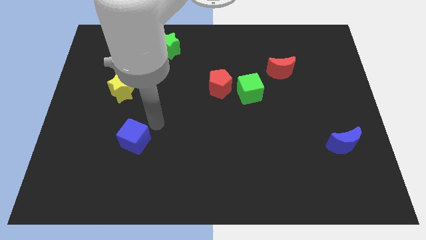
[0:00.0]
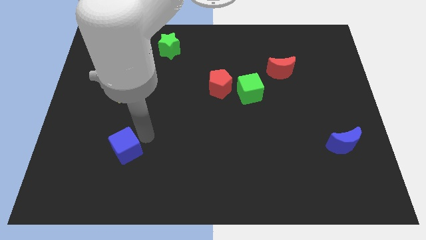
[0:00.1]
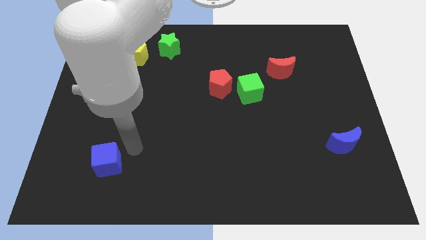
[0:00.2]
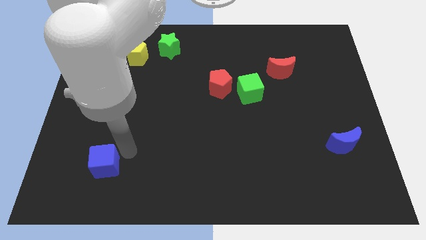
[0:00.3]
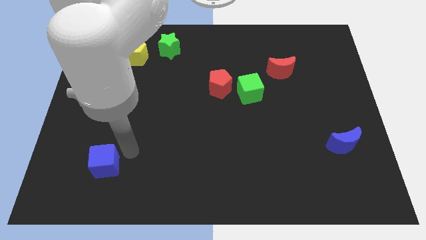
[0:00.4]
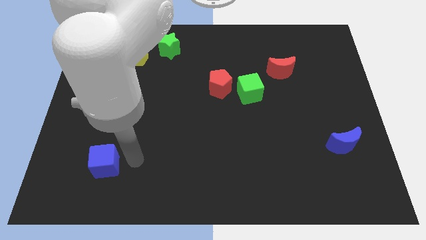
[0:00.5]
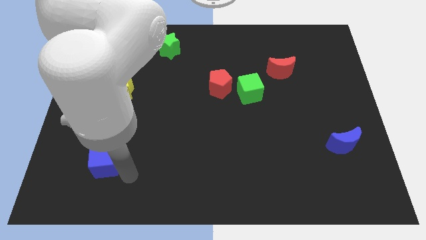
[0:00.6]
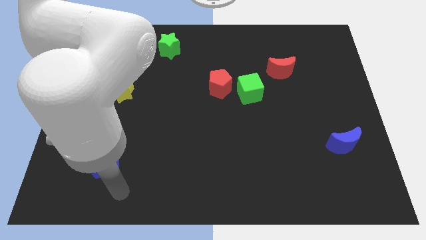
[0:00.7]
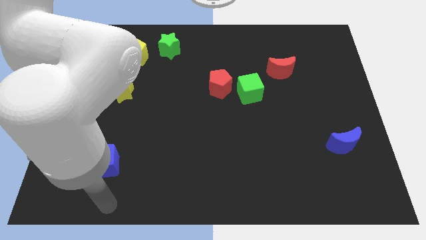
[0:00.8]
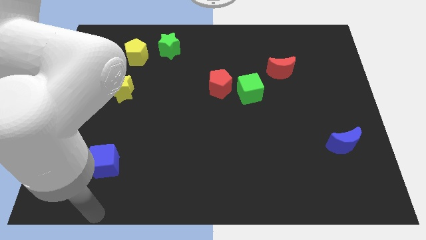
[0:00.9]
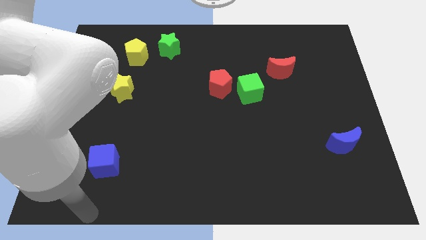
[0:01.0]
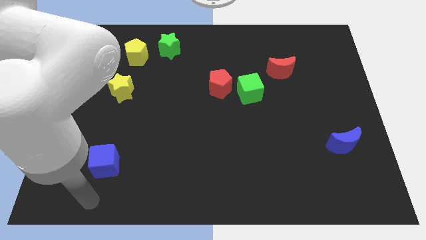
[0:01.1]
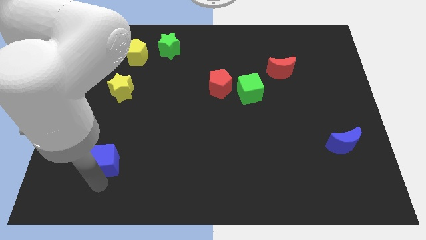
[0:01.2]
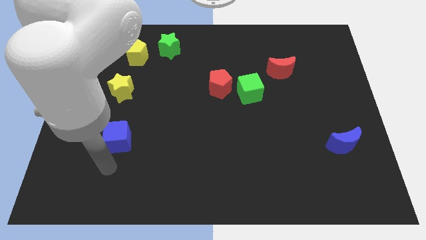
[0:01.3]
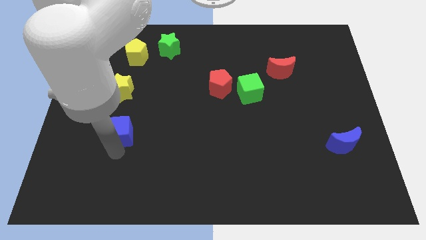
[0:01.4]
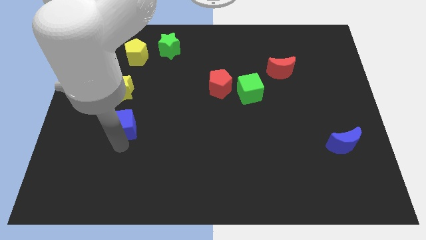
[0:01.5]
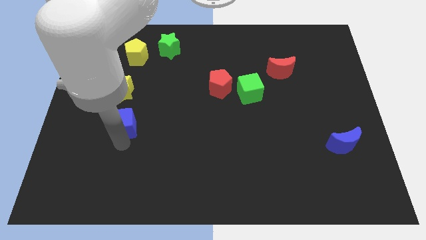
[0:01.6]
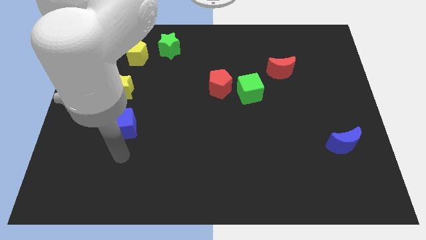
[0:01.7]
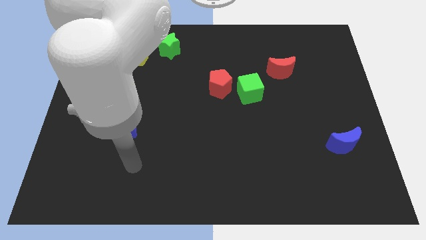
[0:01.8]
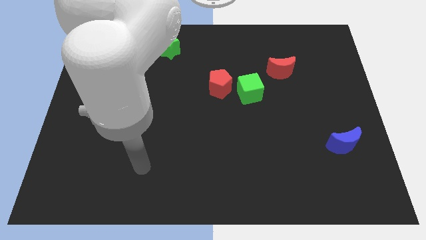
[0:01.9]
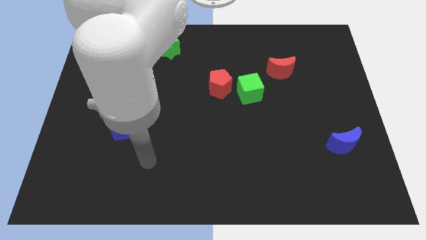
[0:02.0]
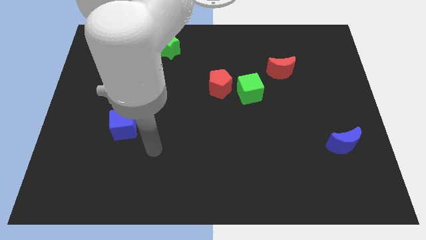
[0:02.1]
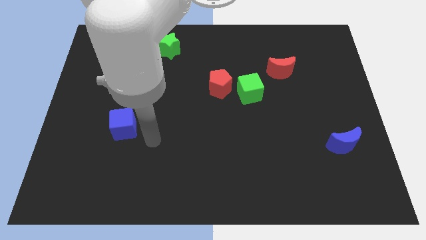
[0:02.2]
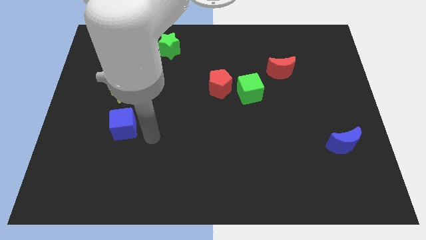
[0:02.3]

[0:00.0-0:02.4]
slightly push the blue cube to the upwards

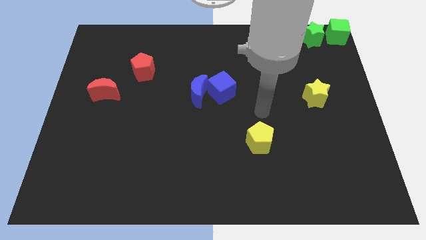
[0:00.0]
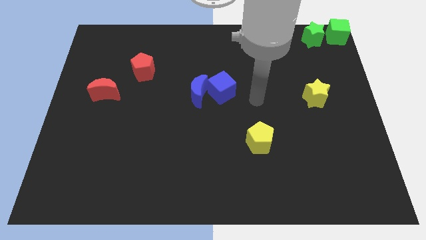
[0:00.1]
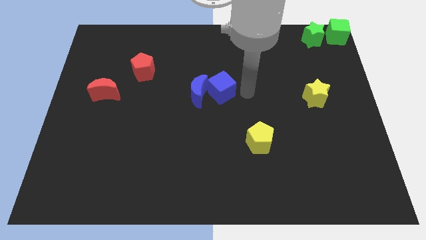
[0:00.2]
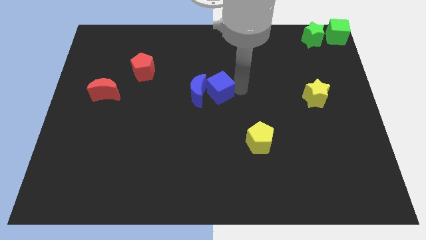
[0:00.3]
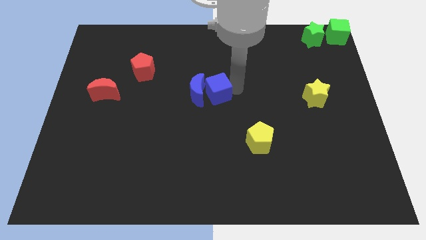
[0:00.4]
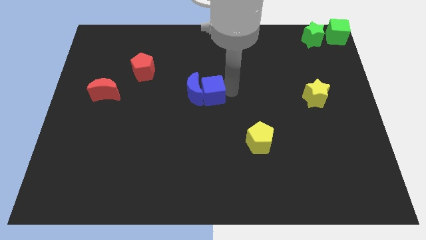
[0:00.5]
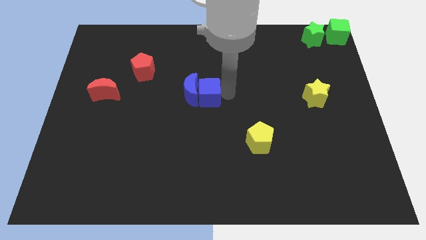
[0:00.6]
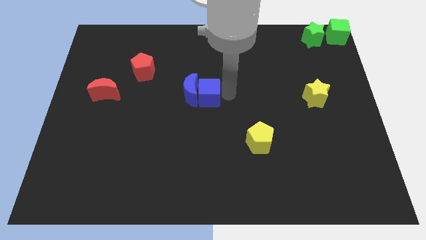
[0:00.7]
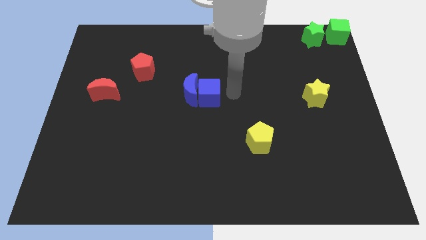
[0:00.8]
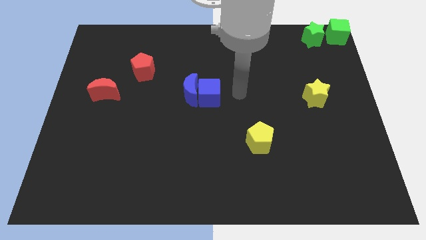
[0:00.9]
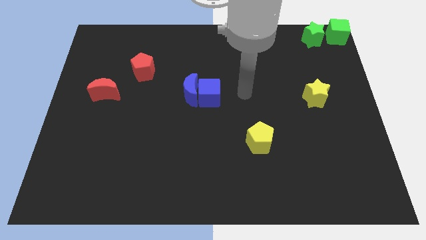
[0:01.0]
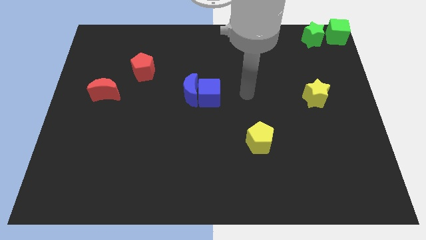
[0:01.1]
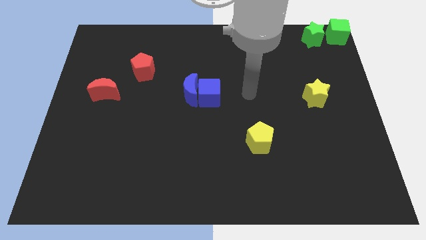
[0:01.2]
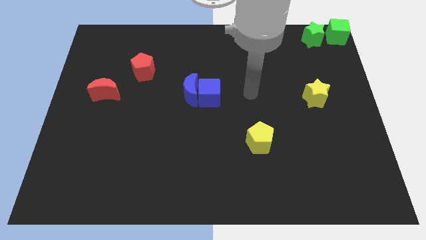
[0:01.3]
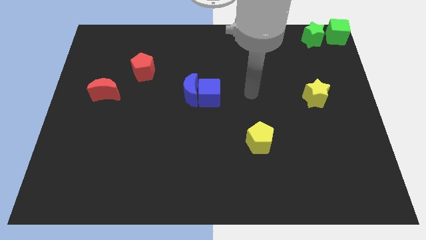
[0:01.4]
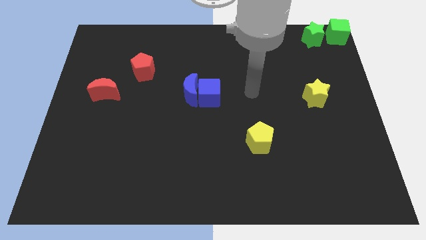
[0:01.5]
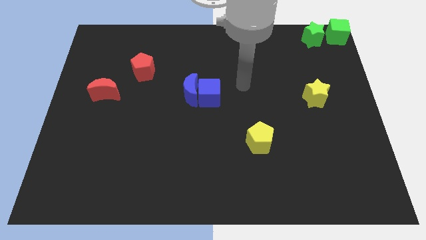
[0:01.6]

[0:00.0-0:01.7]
push the blue cube into the blue moon

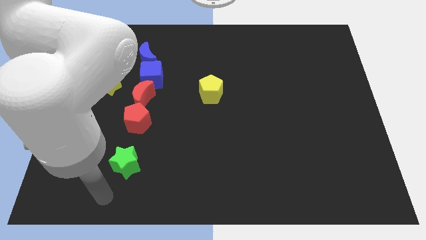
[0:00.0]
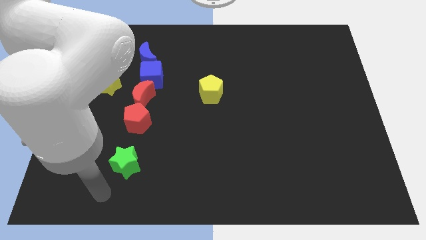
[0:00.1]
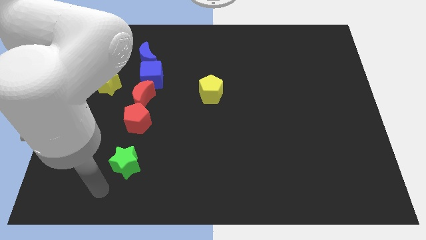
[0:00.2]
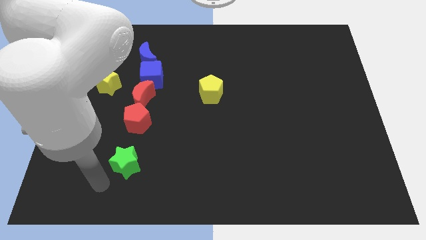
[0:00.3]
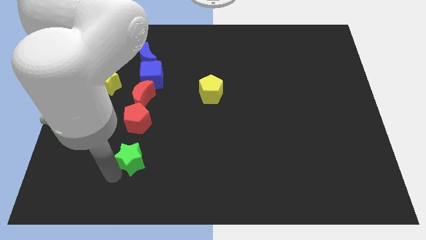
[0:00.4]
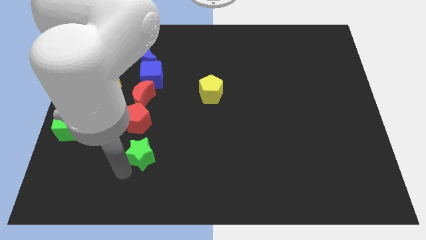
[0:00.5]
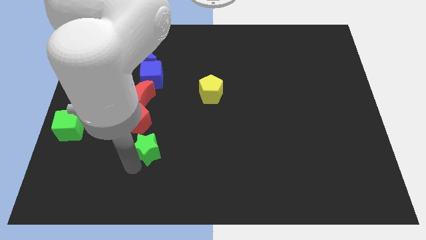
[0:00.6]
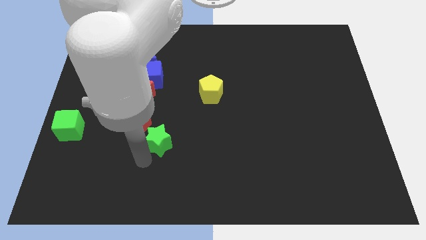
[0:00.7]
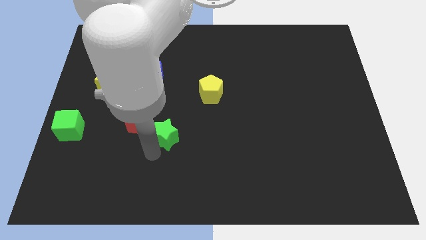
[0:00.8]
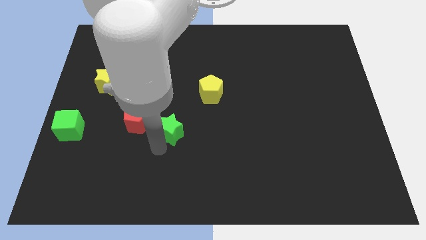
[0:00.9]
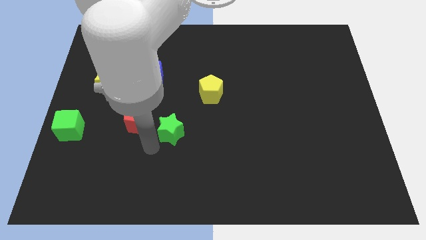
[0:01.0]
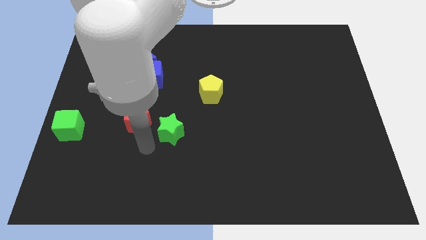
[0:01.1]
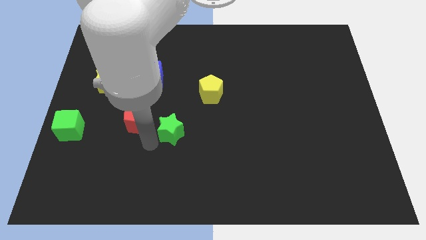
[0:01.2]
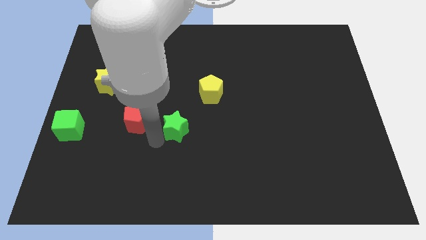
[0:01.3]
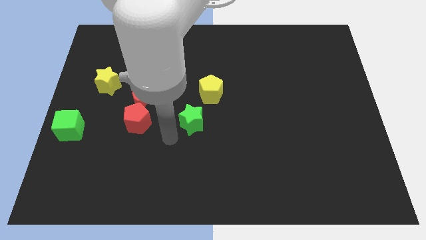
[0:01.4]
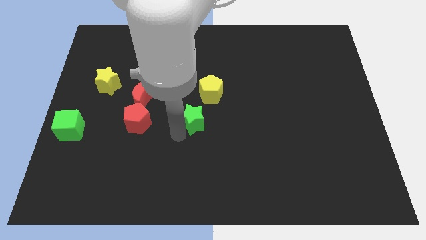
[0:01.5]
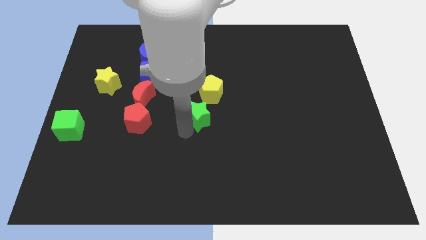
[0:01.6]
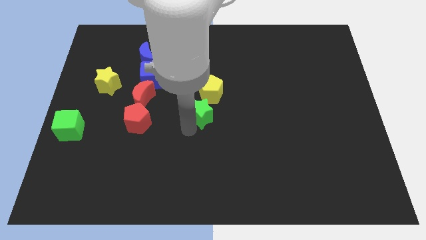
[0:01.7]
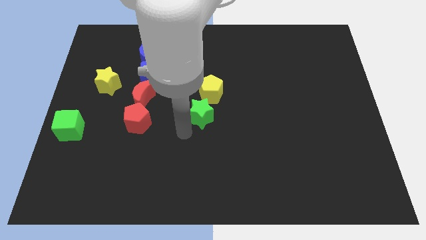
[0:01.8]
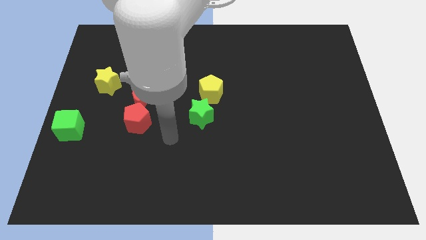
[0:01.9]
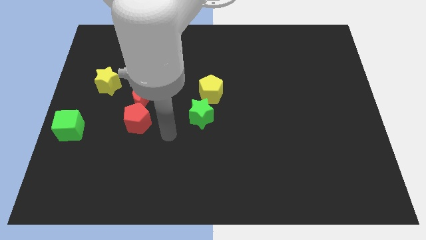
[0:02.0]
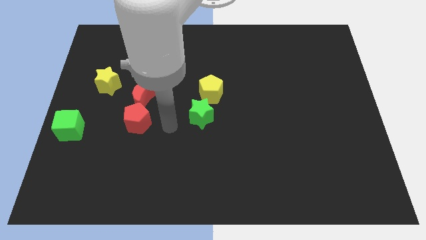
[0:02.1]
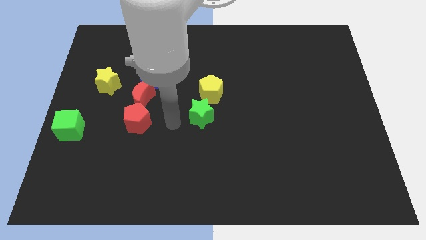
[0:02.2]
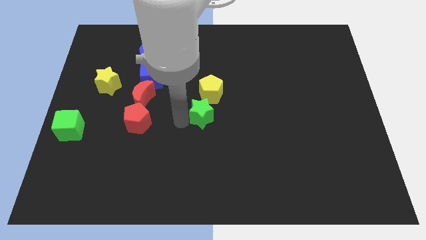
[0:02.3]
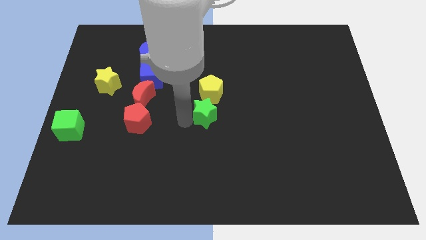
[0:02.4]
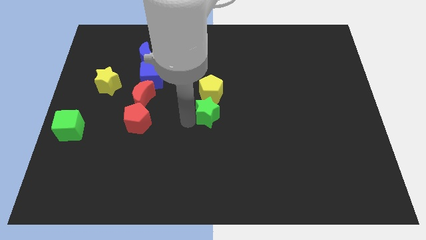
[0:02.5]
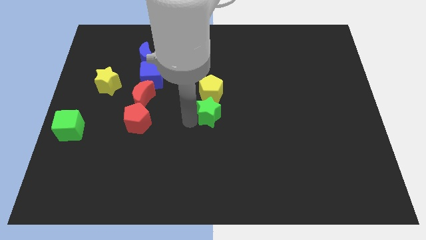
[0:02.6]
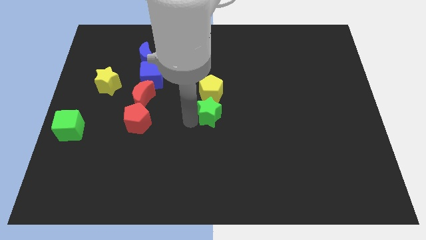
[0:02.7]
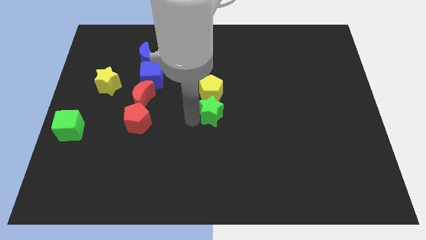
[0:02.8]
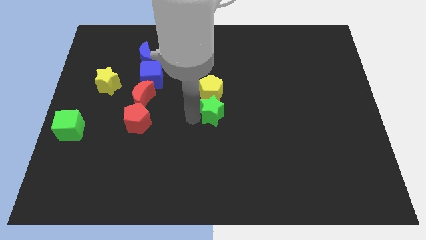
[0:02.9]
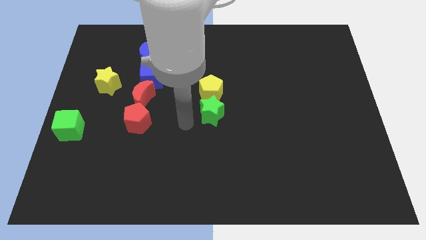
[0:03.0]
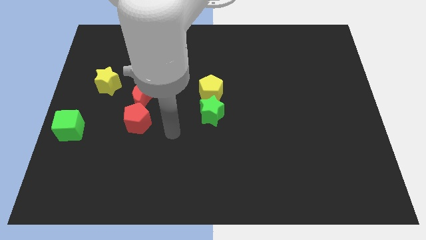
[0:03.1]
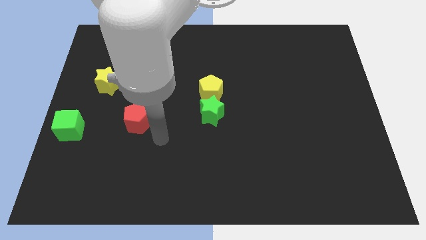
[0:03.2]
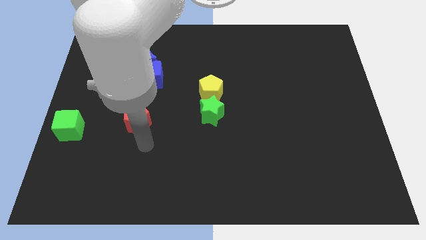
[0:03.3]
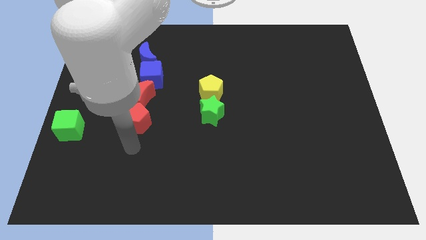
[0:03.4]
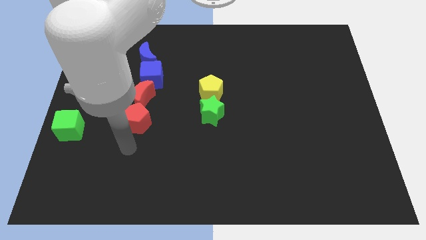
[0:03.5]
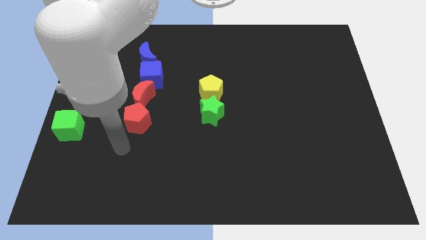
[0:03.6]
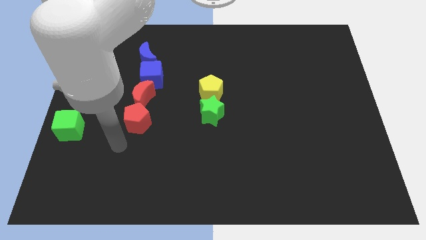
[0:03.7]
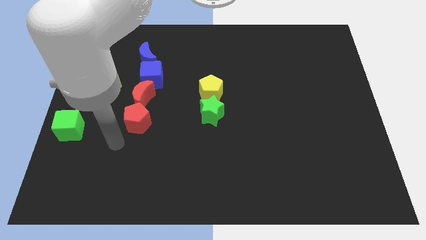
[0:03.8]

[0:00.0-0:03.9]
put the green star below the yellow pentagon

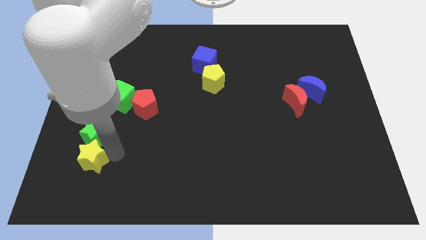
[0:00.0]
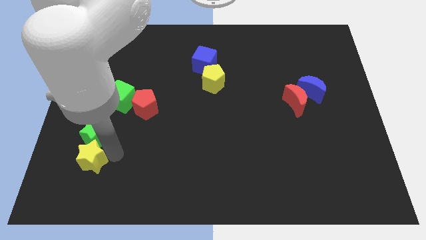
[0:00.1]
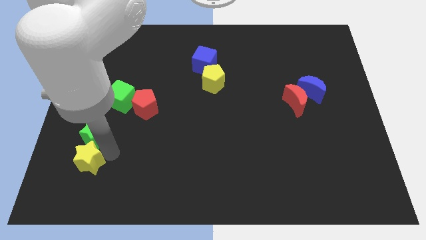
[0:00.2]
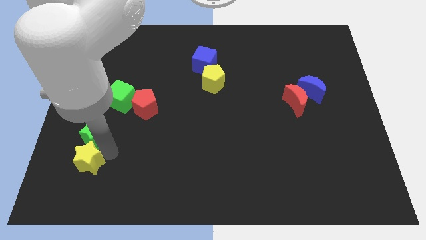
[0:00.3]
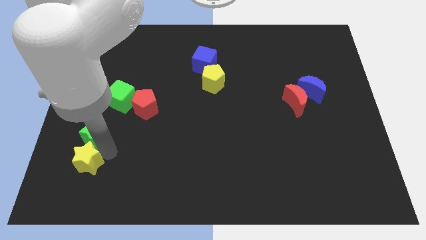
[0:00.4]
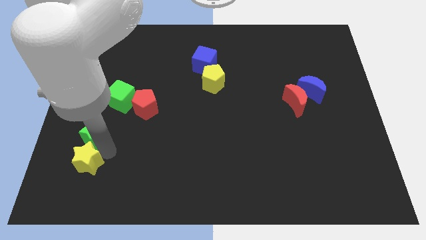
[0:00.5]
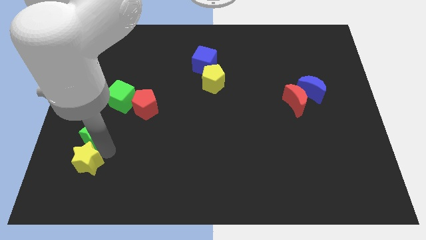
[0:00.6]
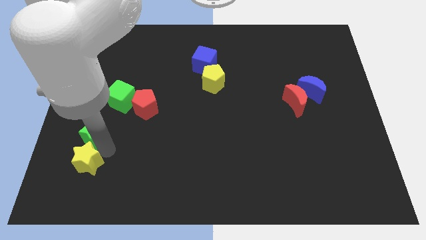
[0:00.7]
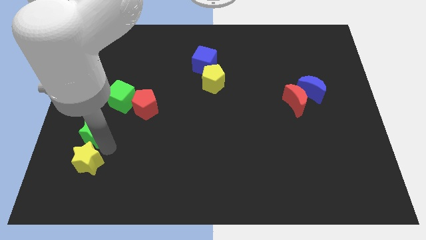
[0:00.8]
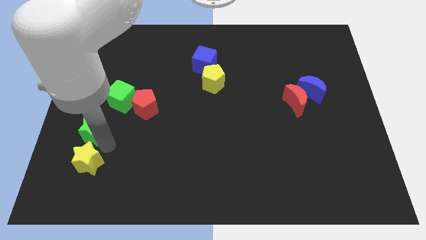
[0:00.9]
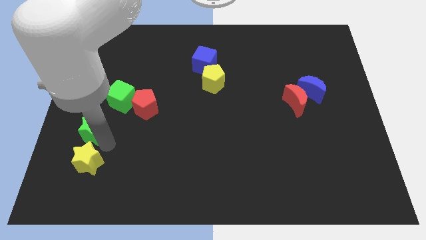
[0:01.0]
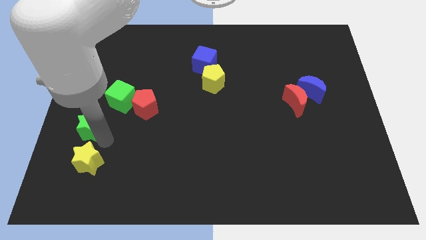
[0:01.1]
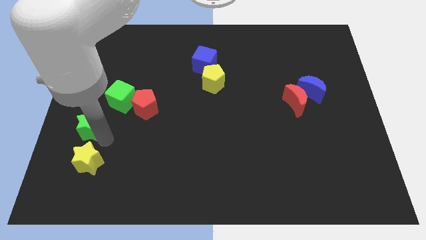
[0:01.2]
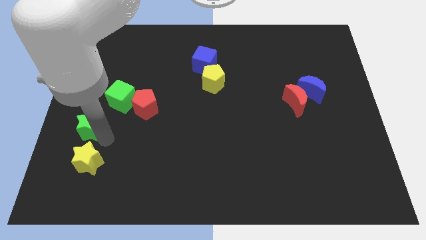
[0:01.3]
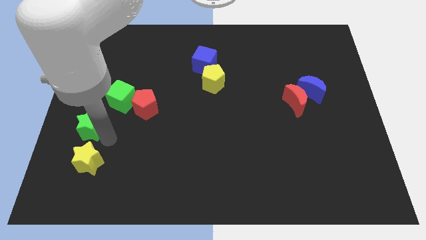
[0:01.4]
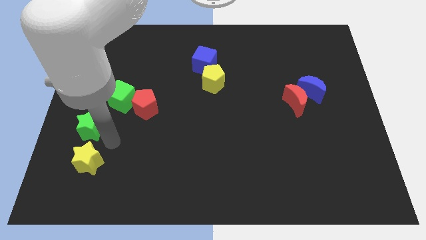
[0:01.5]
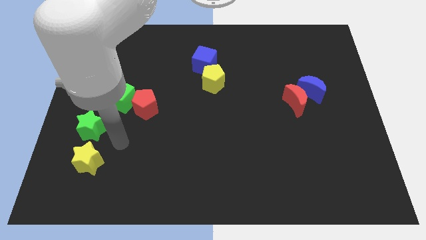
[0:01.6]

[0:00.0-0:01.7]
adjust the places of yellow star and green star
